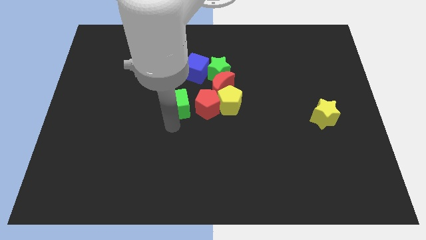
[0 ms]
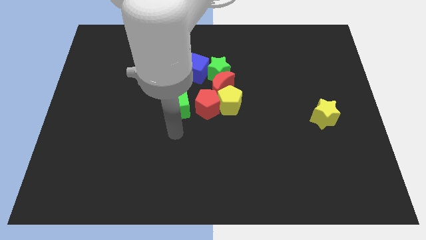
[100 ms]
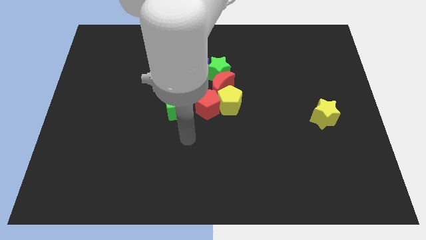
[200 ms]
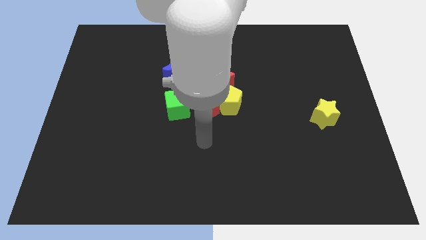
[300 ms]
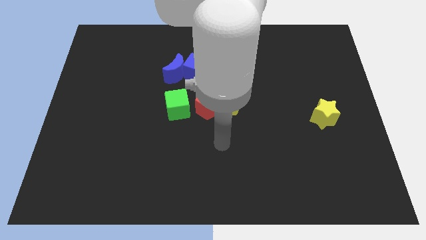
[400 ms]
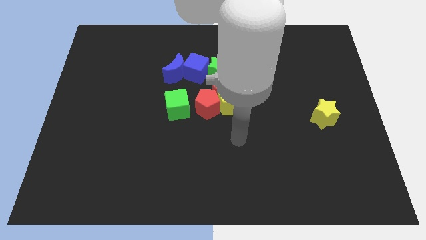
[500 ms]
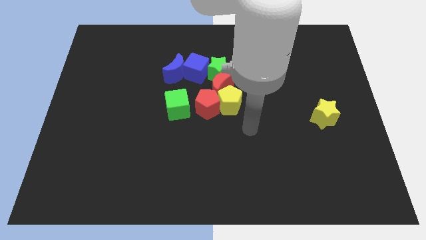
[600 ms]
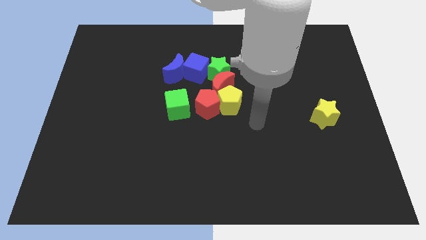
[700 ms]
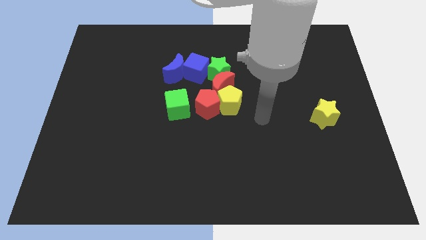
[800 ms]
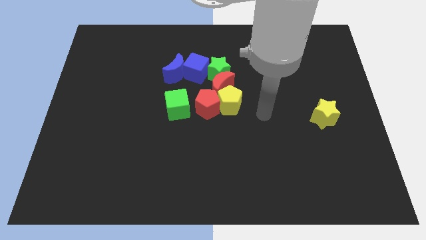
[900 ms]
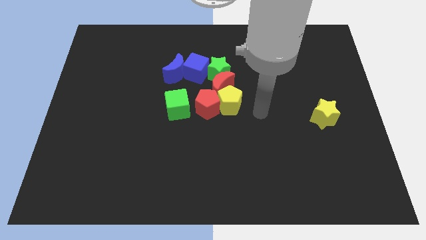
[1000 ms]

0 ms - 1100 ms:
move the arm away from the green cube

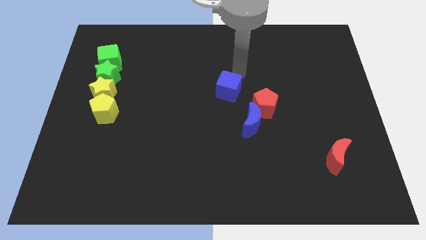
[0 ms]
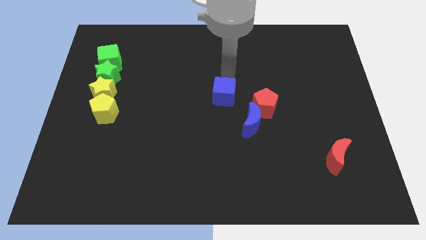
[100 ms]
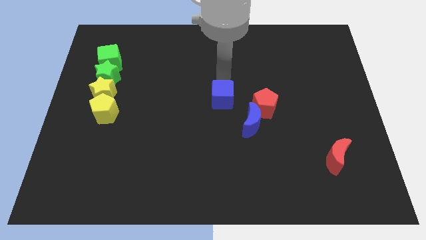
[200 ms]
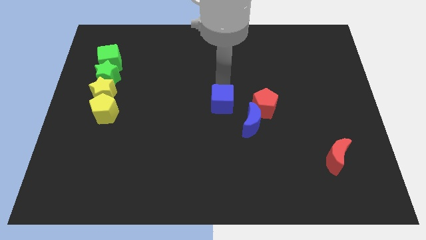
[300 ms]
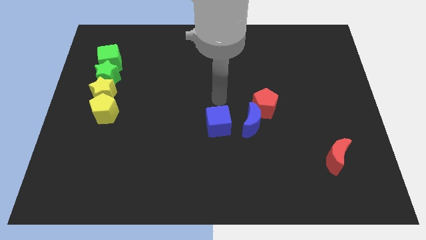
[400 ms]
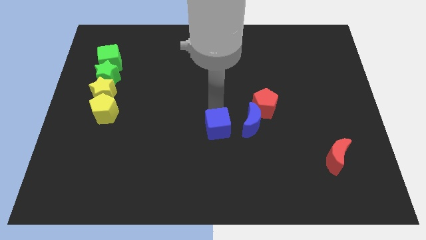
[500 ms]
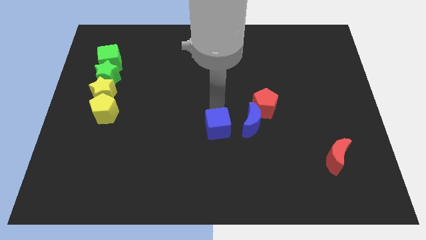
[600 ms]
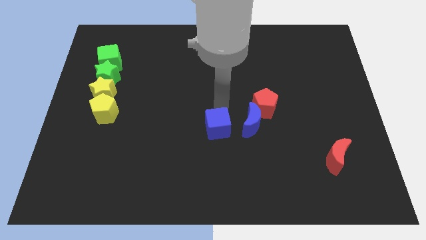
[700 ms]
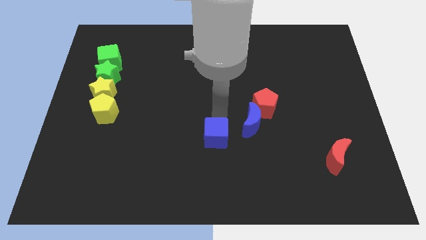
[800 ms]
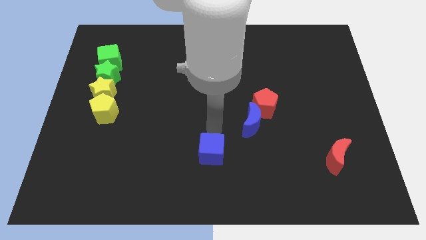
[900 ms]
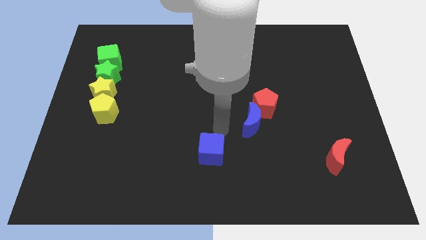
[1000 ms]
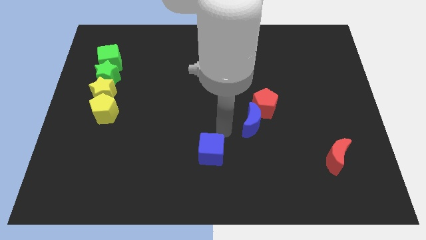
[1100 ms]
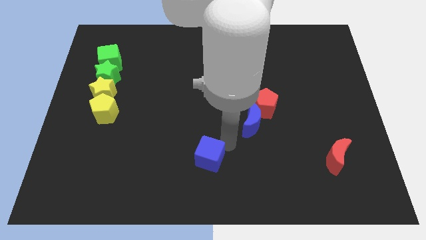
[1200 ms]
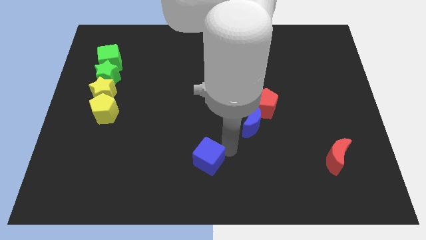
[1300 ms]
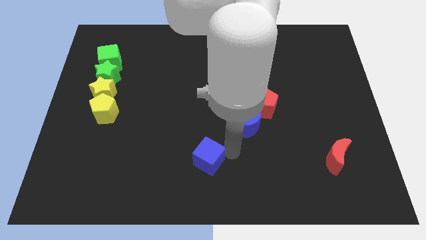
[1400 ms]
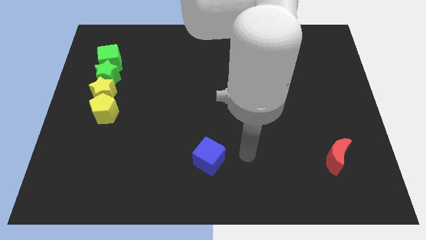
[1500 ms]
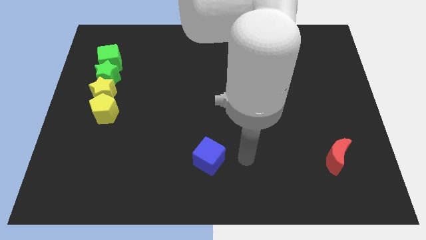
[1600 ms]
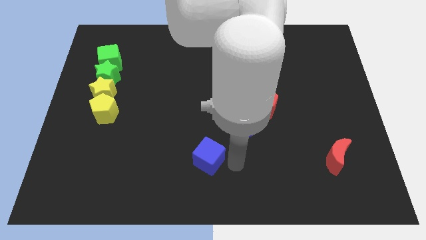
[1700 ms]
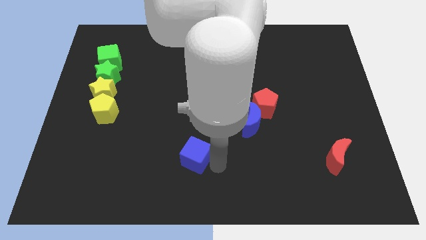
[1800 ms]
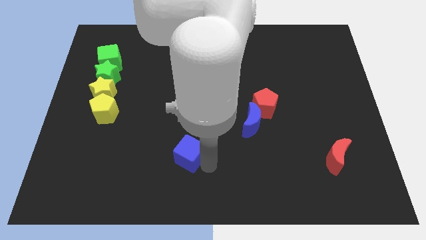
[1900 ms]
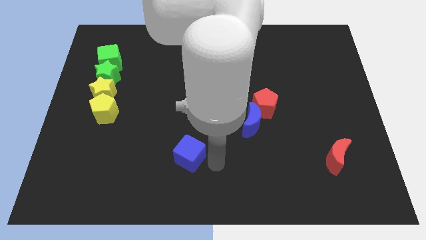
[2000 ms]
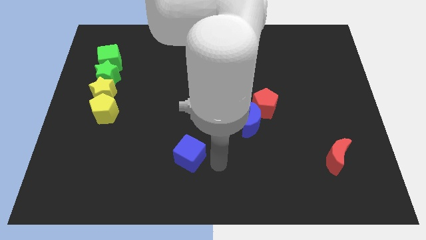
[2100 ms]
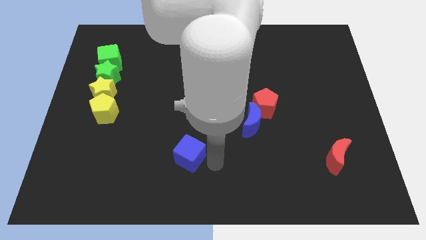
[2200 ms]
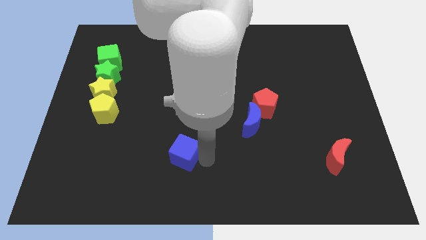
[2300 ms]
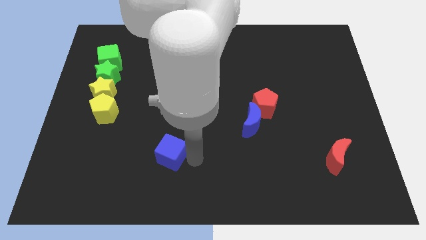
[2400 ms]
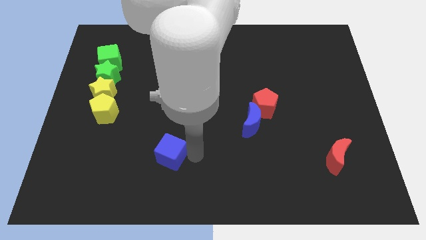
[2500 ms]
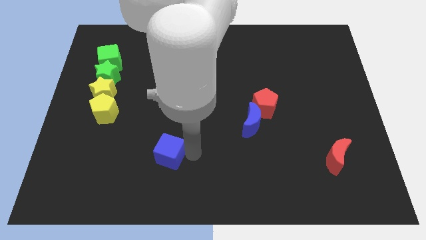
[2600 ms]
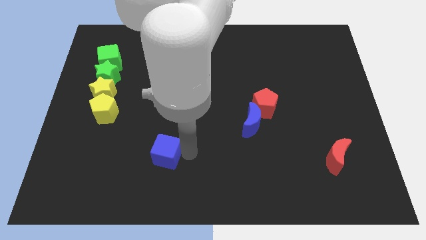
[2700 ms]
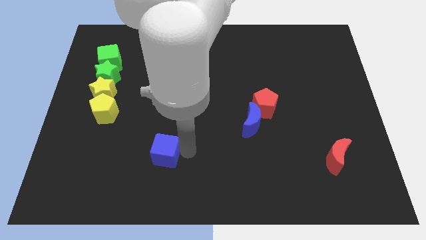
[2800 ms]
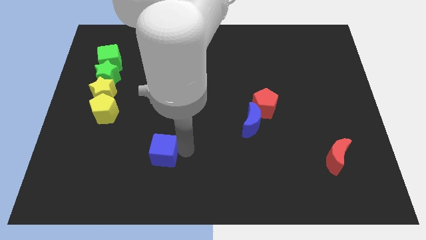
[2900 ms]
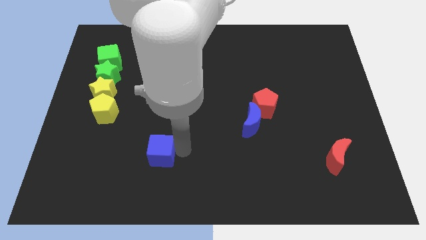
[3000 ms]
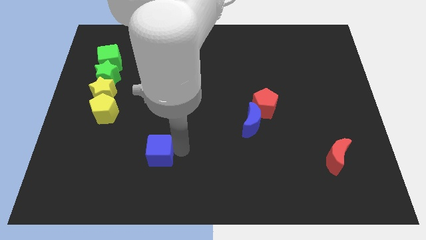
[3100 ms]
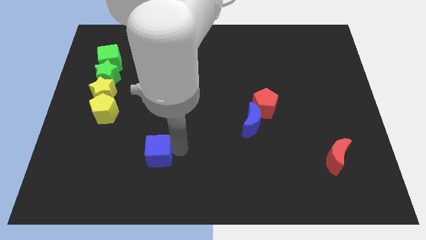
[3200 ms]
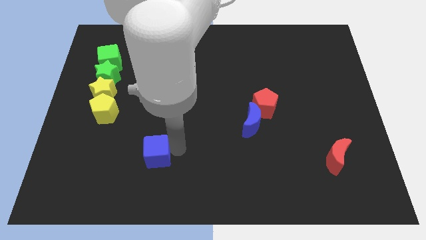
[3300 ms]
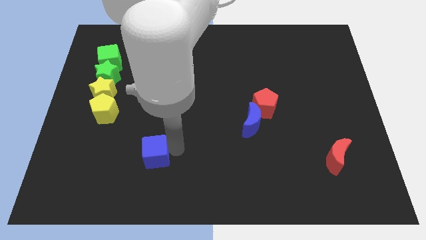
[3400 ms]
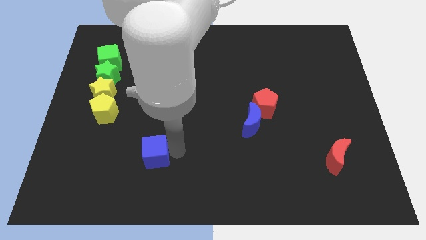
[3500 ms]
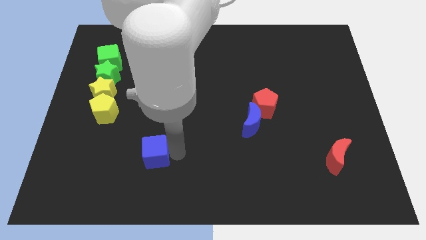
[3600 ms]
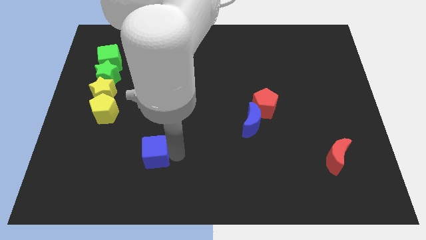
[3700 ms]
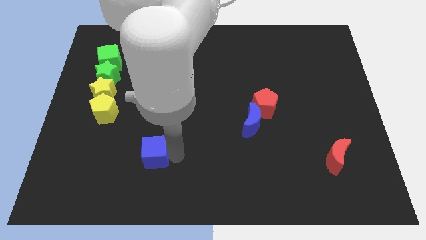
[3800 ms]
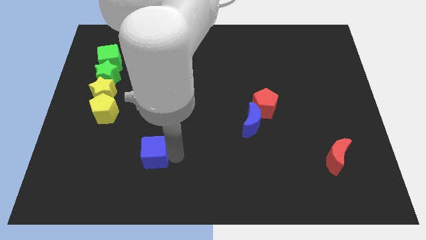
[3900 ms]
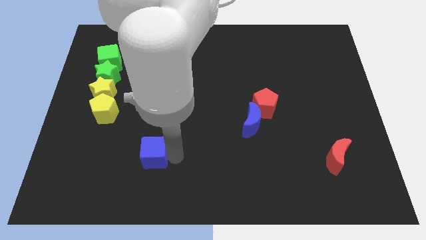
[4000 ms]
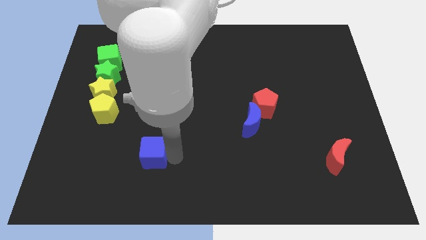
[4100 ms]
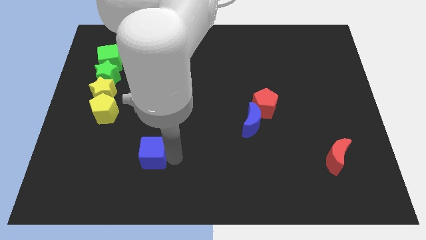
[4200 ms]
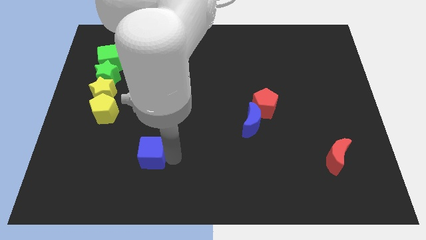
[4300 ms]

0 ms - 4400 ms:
place blue cube to the bottom right of yellow pentagon

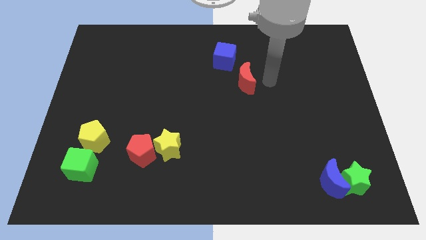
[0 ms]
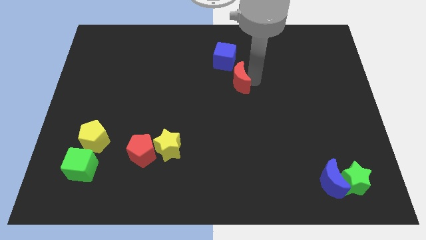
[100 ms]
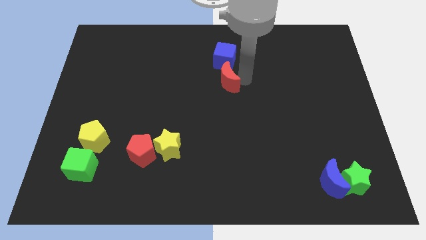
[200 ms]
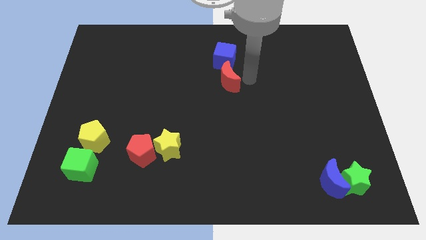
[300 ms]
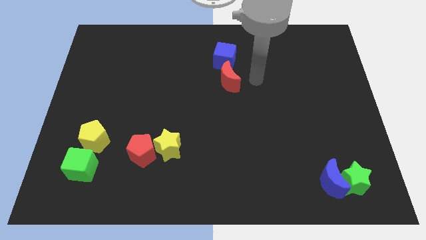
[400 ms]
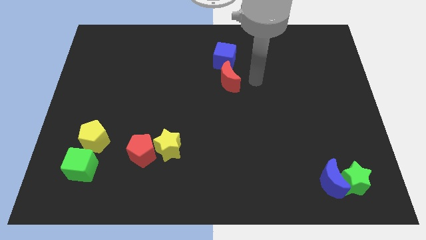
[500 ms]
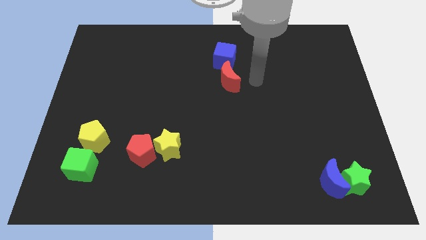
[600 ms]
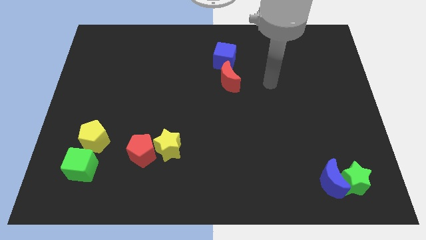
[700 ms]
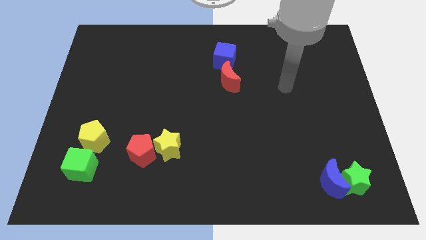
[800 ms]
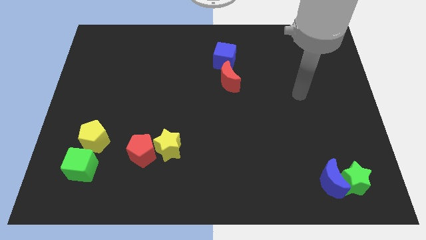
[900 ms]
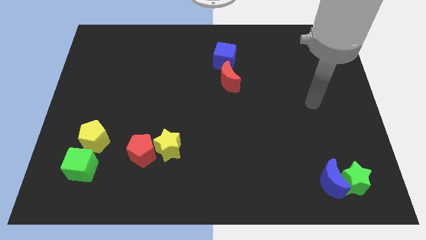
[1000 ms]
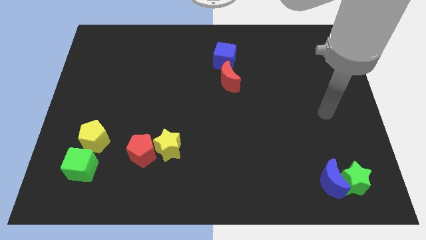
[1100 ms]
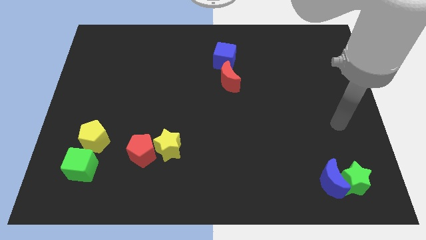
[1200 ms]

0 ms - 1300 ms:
place the red crescent below the blue cube

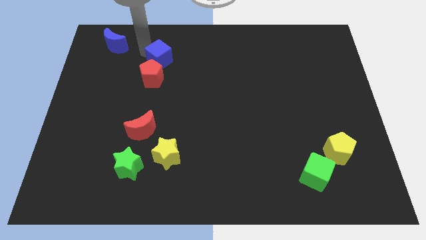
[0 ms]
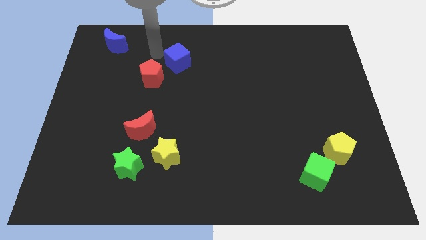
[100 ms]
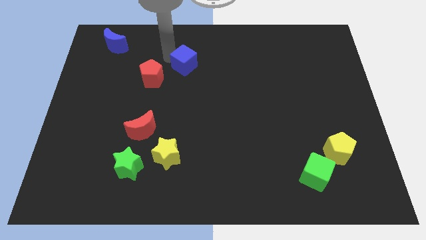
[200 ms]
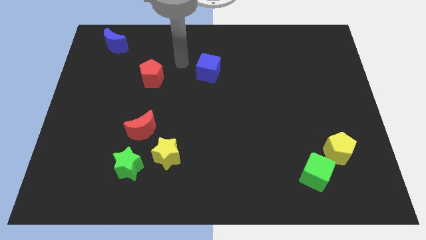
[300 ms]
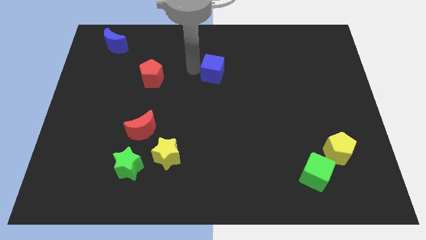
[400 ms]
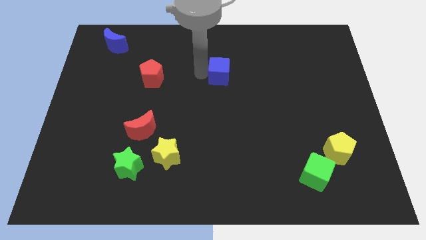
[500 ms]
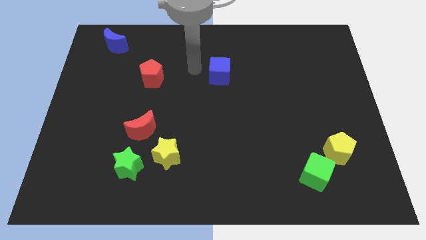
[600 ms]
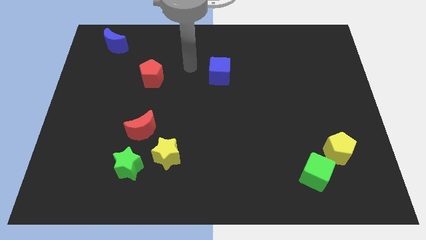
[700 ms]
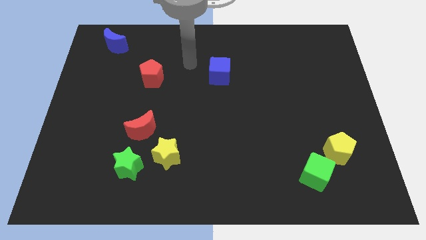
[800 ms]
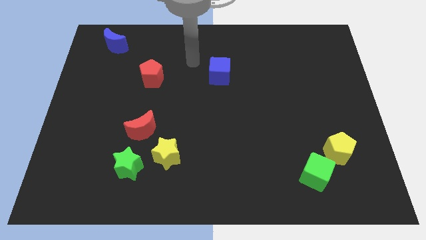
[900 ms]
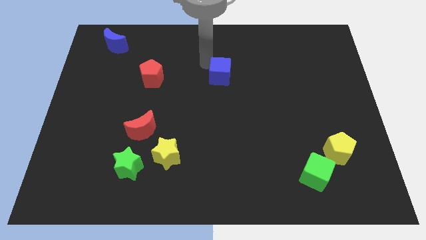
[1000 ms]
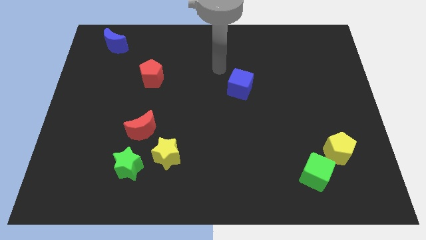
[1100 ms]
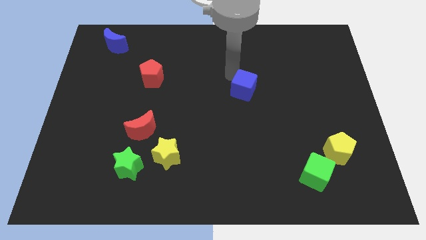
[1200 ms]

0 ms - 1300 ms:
separate the blue cube from the red pentagon

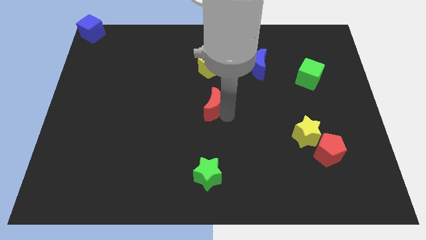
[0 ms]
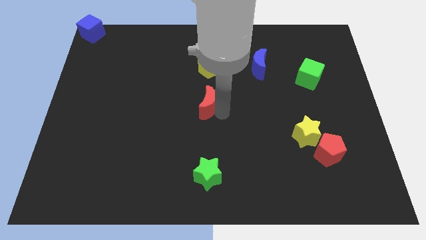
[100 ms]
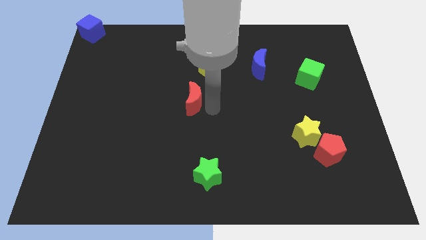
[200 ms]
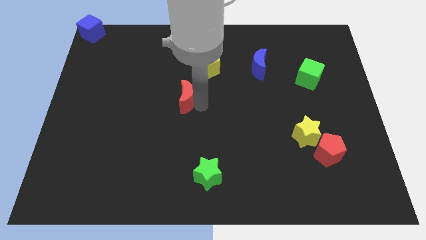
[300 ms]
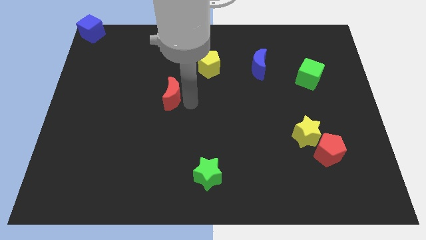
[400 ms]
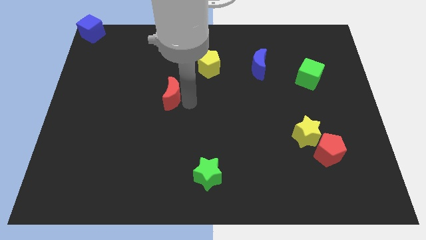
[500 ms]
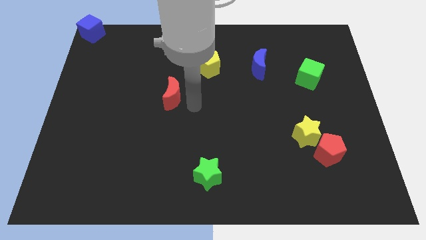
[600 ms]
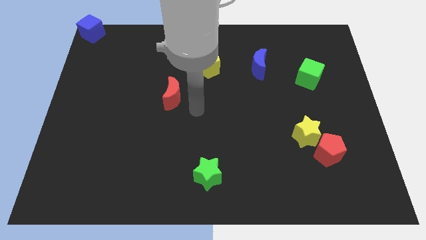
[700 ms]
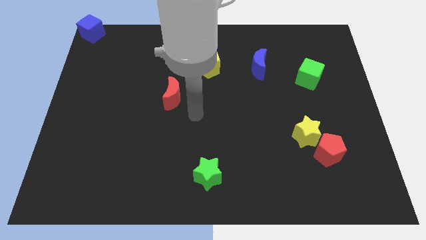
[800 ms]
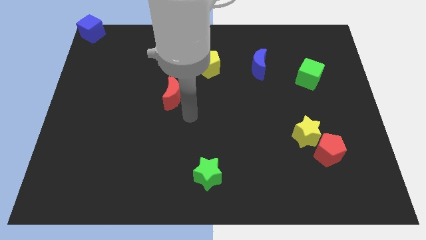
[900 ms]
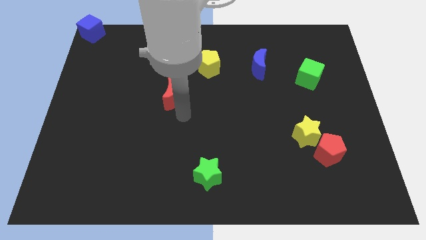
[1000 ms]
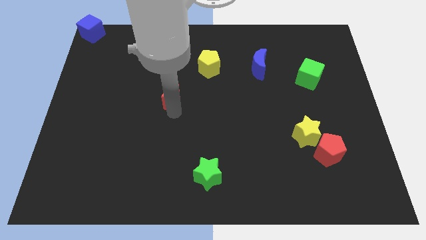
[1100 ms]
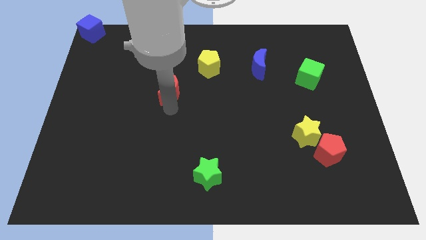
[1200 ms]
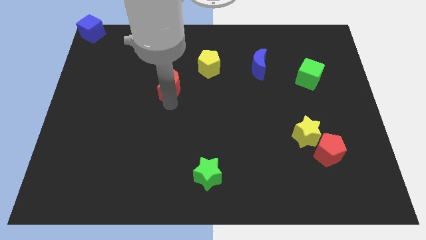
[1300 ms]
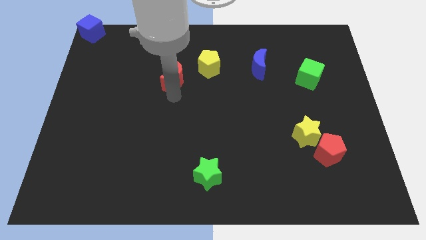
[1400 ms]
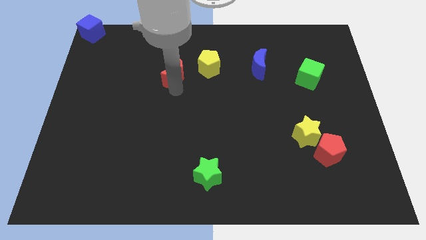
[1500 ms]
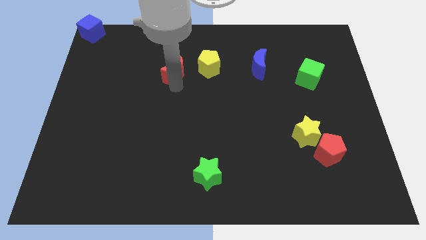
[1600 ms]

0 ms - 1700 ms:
place the red moon to left side of yellow pentagon
